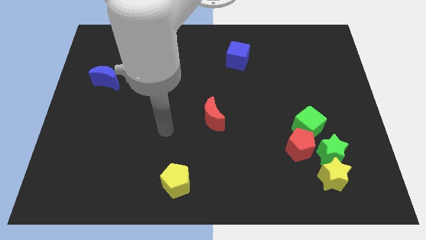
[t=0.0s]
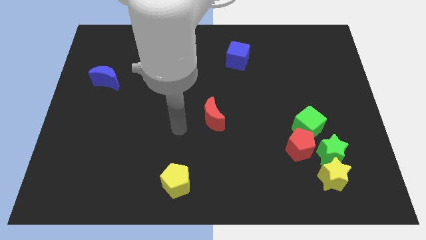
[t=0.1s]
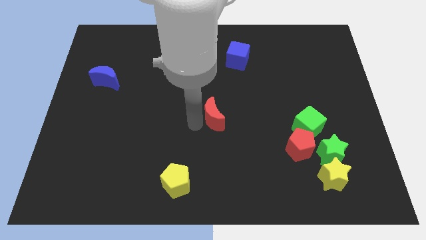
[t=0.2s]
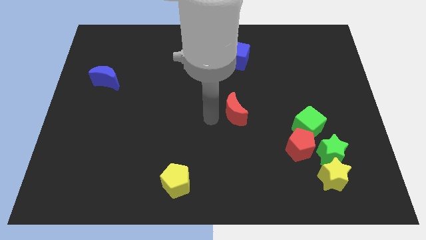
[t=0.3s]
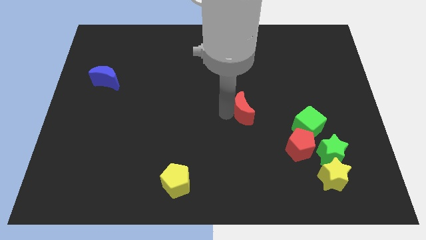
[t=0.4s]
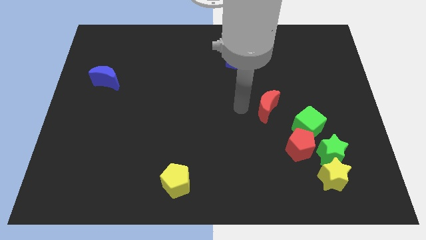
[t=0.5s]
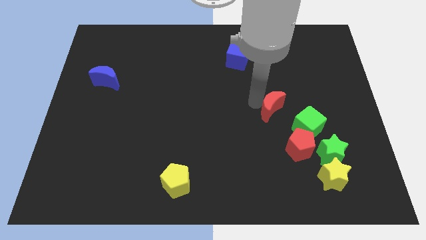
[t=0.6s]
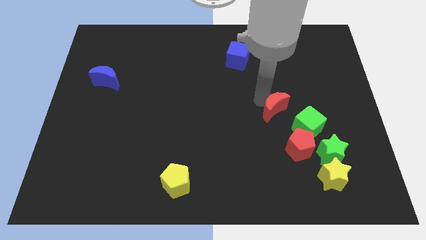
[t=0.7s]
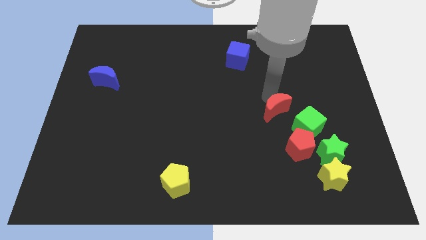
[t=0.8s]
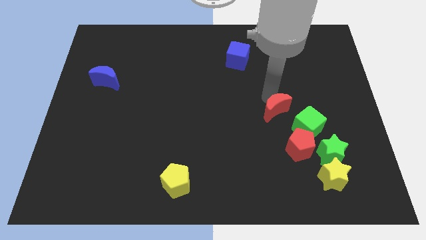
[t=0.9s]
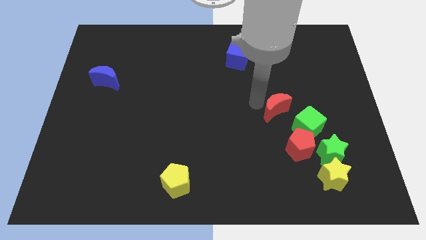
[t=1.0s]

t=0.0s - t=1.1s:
push red crescent towards green cube

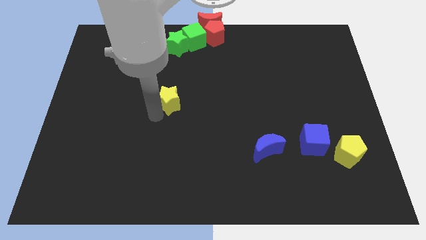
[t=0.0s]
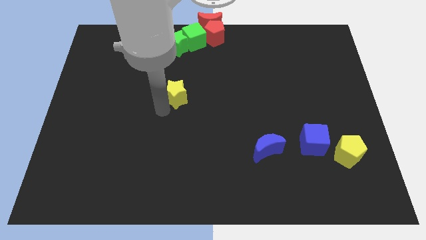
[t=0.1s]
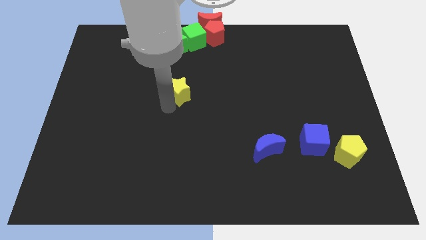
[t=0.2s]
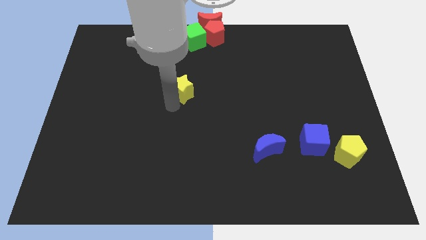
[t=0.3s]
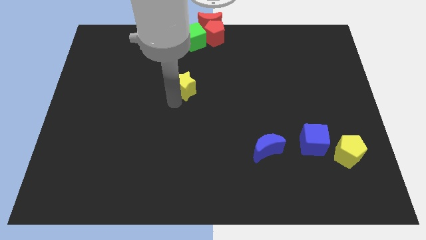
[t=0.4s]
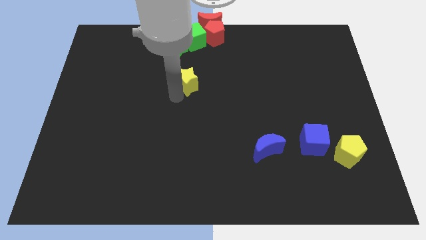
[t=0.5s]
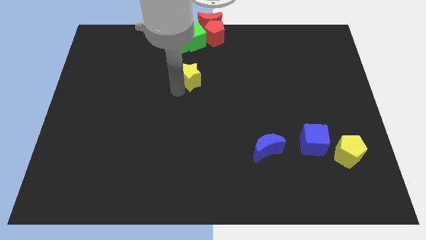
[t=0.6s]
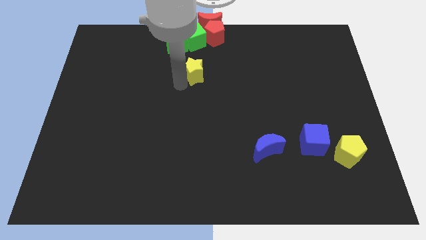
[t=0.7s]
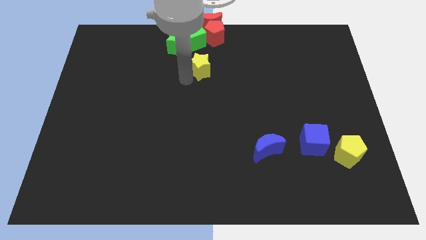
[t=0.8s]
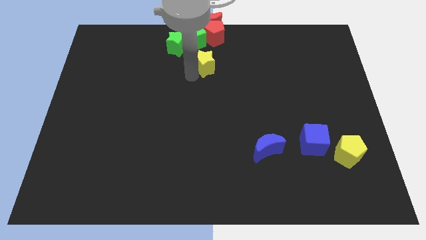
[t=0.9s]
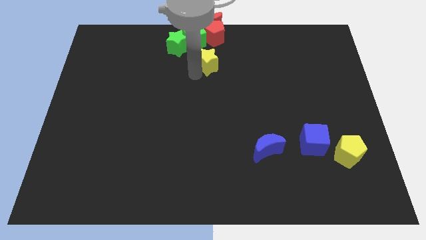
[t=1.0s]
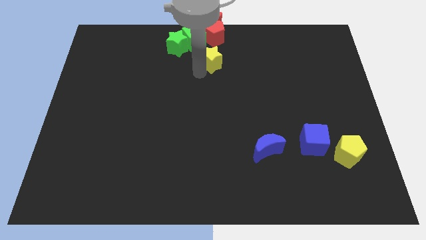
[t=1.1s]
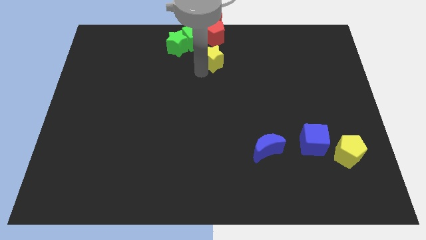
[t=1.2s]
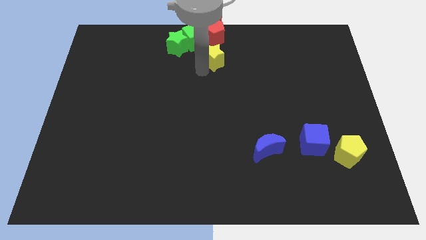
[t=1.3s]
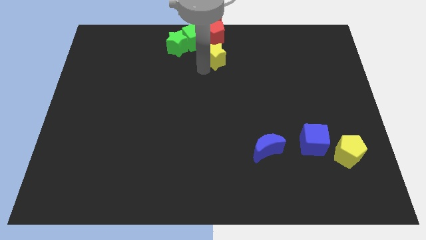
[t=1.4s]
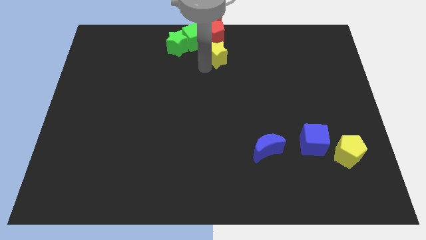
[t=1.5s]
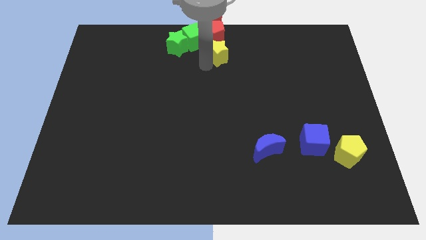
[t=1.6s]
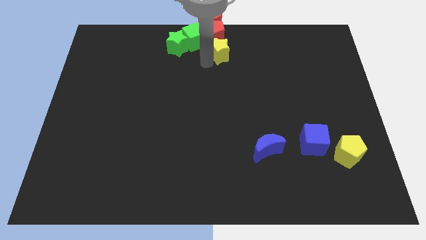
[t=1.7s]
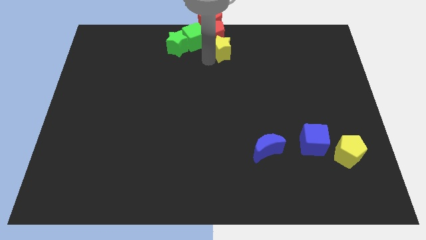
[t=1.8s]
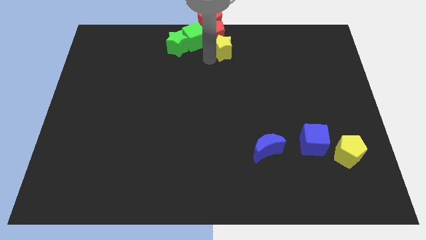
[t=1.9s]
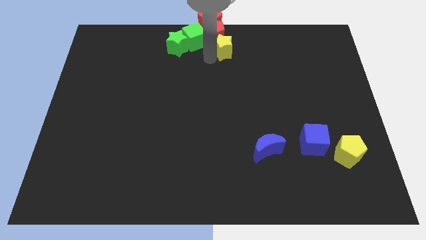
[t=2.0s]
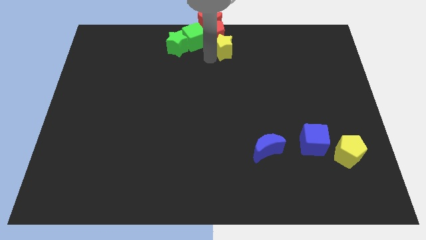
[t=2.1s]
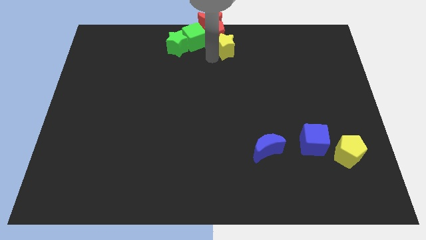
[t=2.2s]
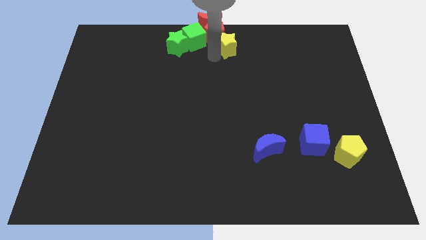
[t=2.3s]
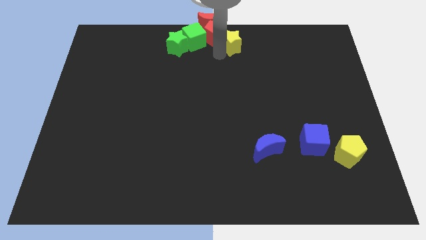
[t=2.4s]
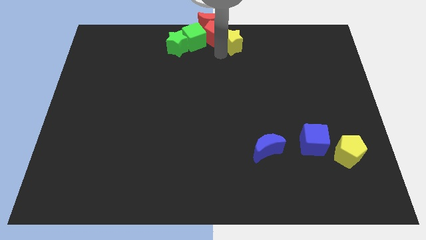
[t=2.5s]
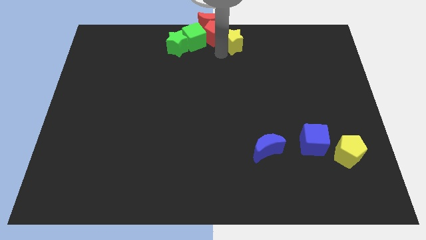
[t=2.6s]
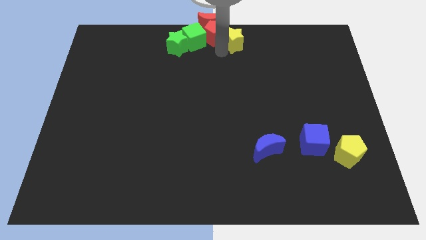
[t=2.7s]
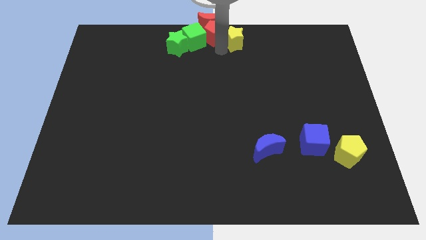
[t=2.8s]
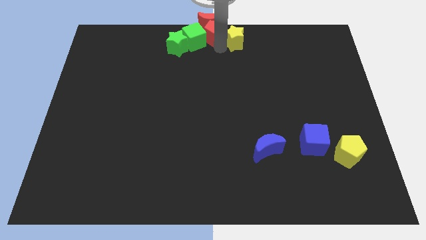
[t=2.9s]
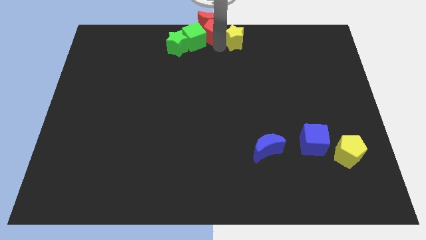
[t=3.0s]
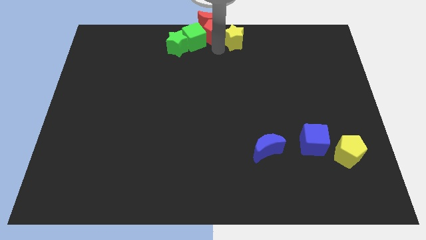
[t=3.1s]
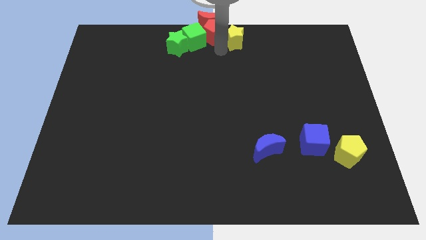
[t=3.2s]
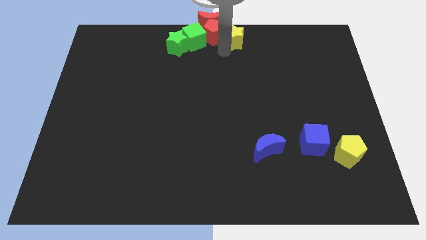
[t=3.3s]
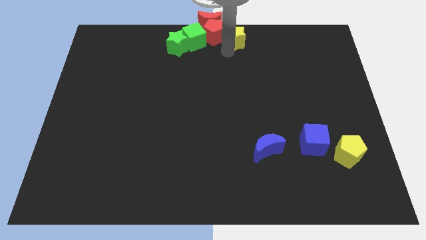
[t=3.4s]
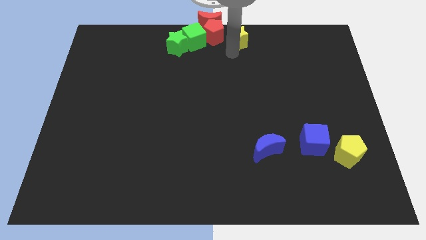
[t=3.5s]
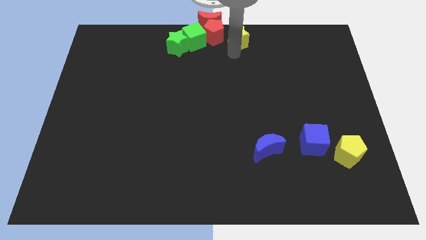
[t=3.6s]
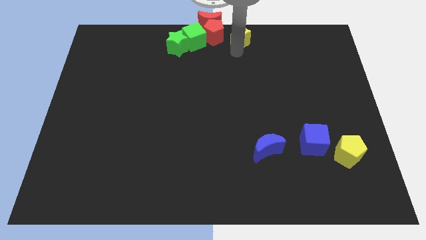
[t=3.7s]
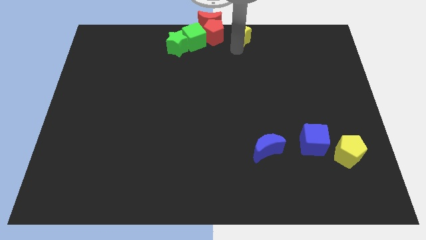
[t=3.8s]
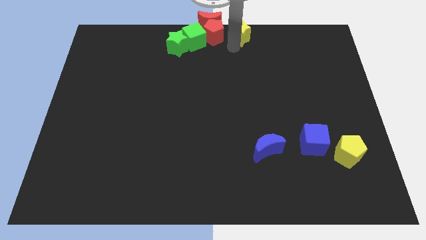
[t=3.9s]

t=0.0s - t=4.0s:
slide the yellow star to the right side of the red pentagon

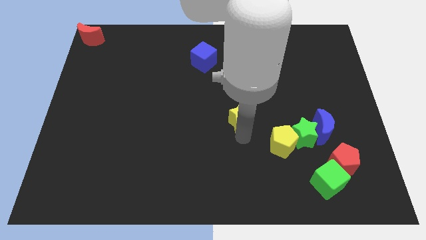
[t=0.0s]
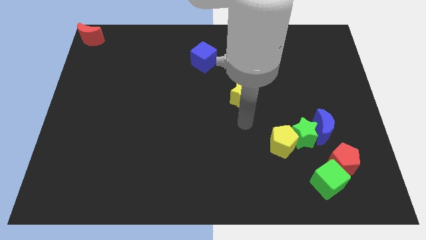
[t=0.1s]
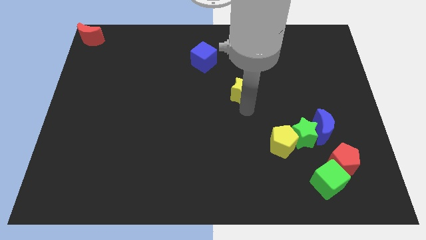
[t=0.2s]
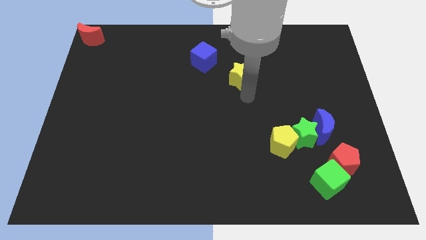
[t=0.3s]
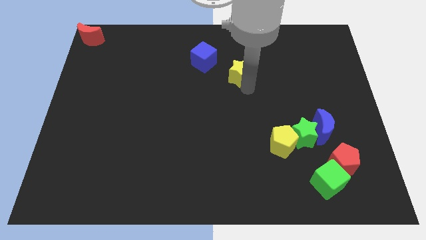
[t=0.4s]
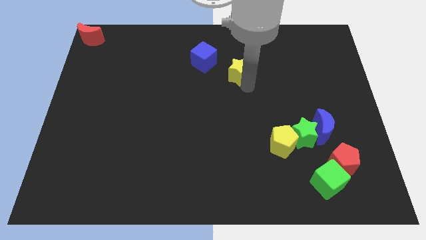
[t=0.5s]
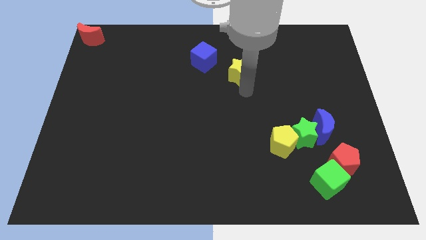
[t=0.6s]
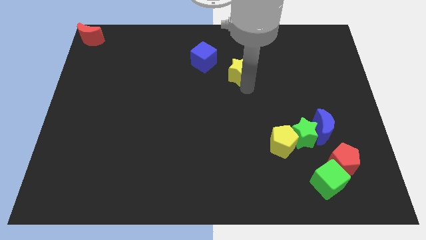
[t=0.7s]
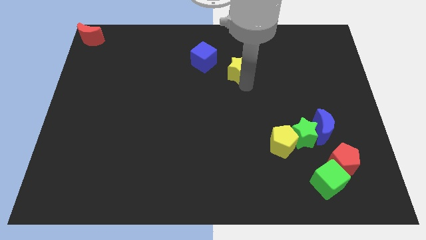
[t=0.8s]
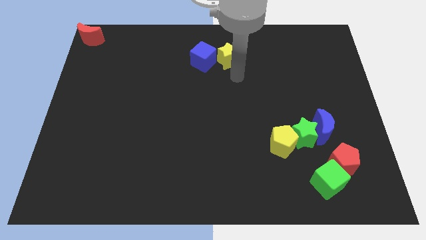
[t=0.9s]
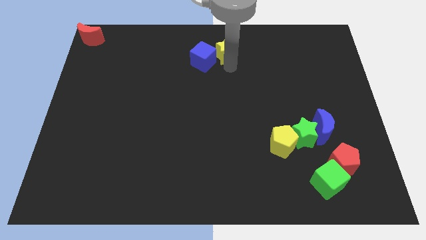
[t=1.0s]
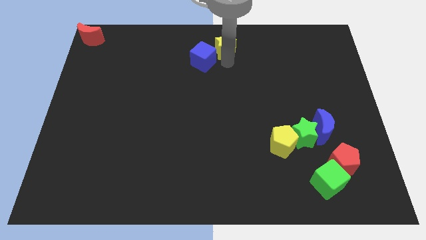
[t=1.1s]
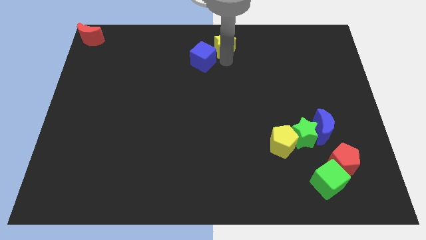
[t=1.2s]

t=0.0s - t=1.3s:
pull the yellow star towards the blue cube

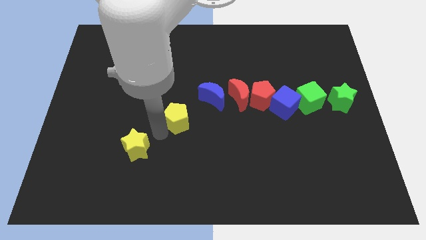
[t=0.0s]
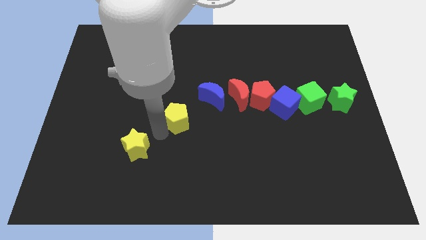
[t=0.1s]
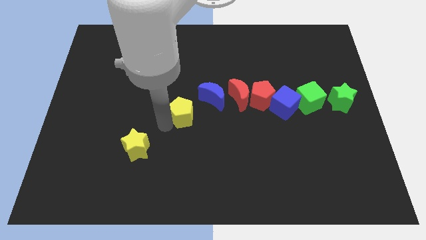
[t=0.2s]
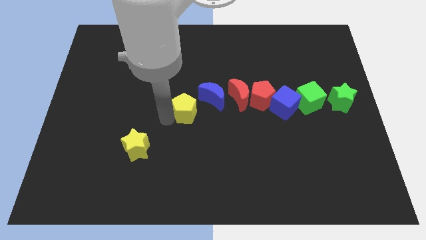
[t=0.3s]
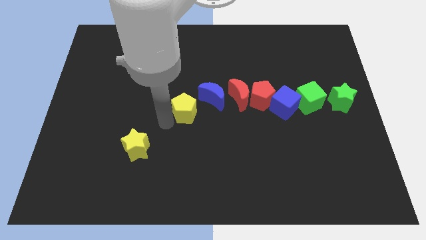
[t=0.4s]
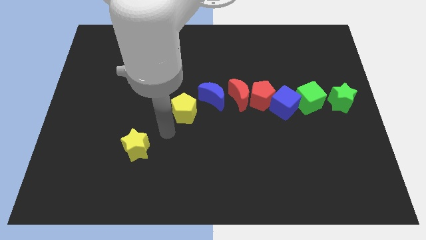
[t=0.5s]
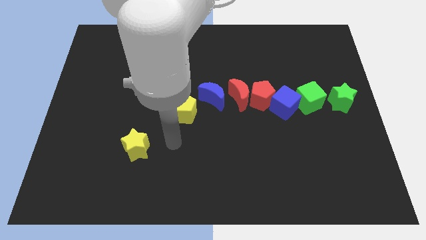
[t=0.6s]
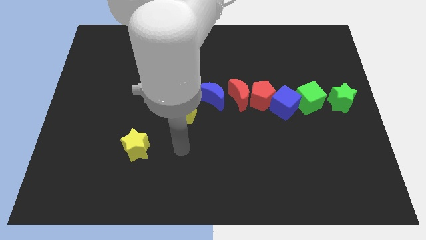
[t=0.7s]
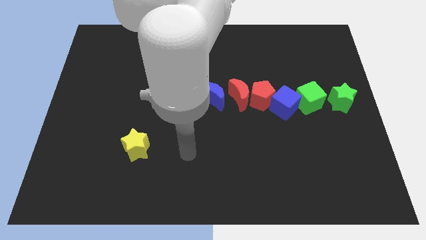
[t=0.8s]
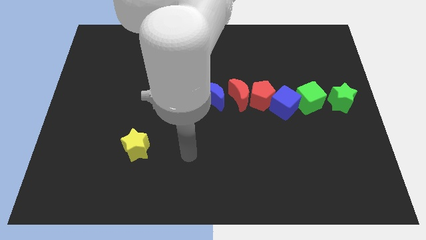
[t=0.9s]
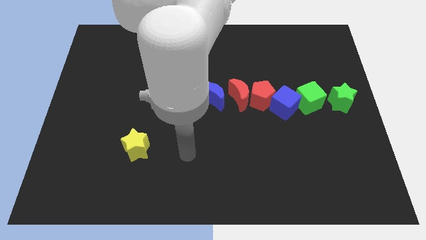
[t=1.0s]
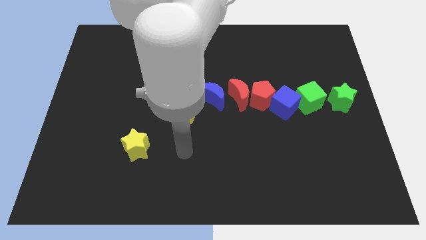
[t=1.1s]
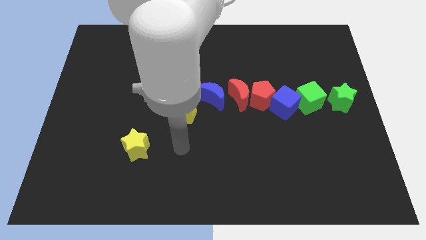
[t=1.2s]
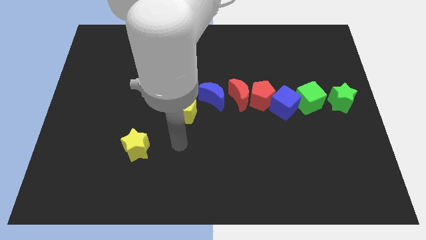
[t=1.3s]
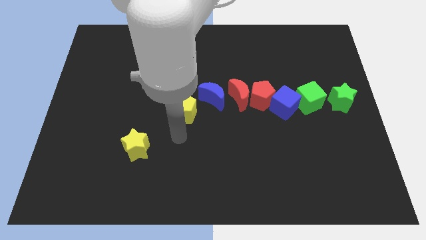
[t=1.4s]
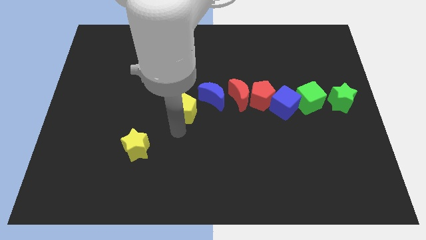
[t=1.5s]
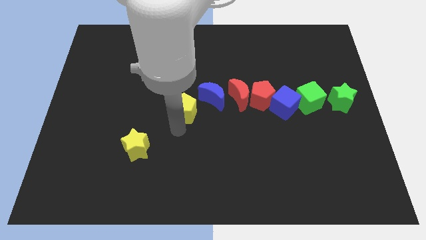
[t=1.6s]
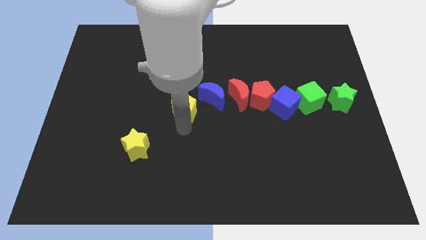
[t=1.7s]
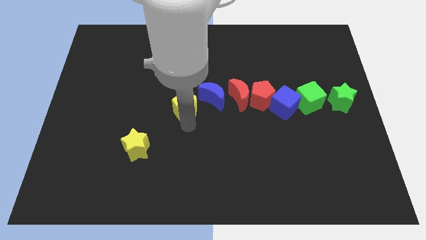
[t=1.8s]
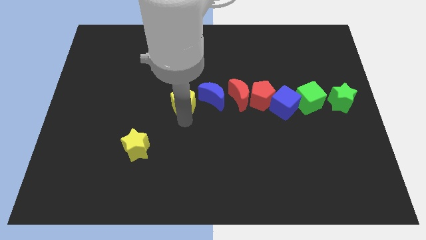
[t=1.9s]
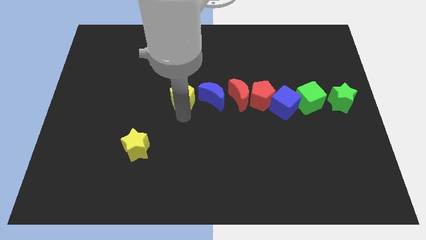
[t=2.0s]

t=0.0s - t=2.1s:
push the yellow pentagon parallel left of the blue moon

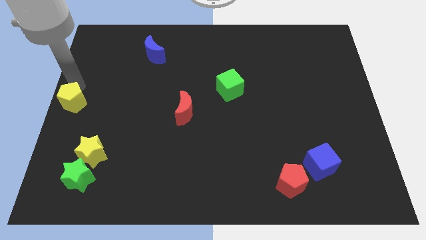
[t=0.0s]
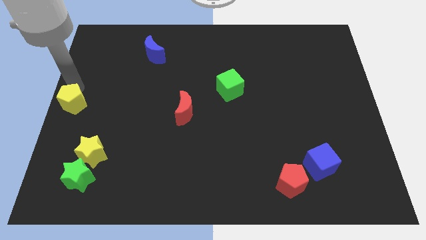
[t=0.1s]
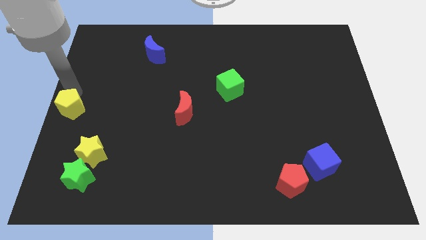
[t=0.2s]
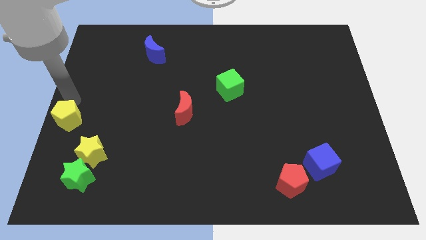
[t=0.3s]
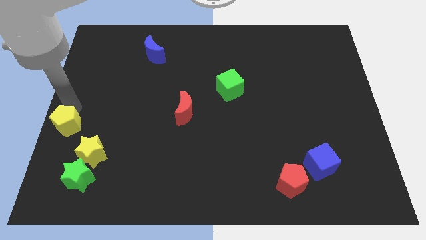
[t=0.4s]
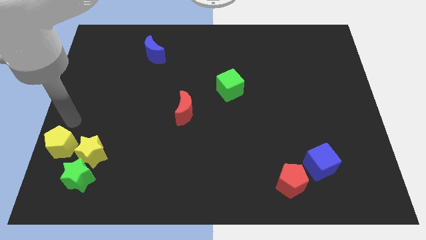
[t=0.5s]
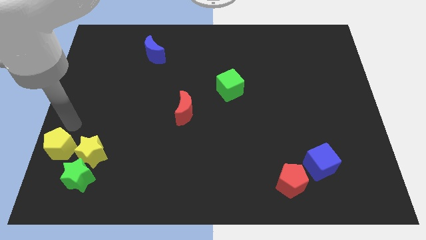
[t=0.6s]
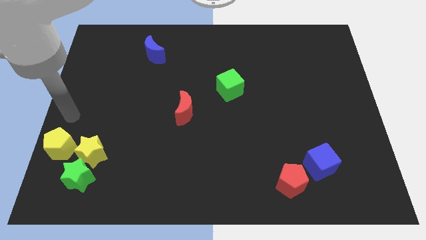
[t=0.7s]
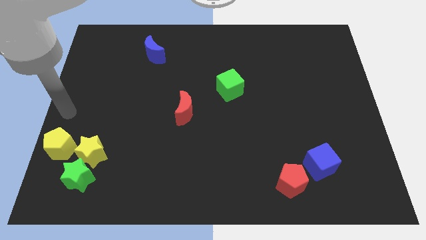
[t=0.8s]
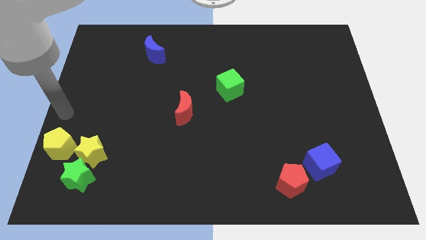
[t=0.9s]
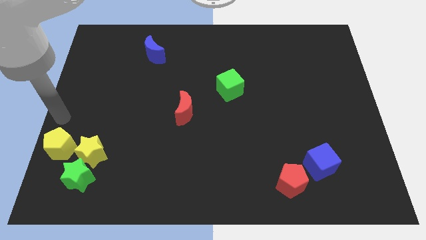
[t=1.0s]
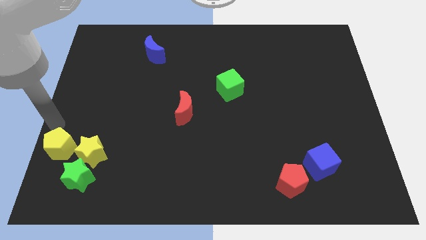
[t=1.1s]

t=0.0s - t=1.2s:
push the yellow pentagon to the left of the yellow star
